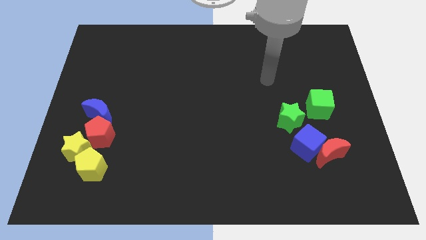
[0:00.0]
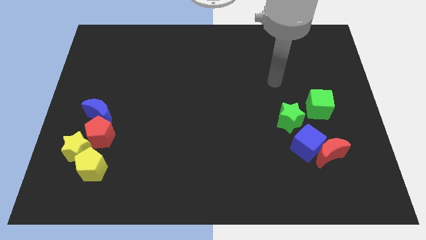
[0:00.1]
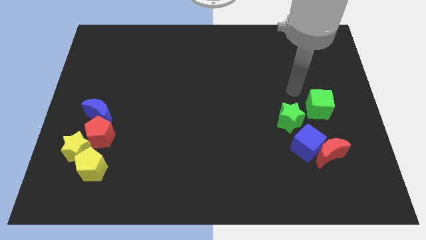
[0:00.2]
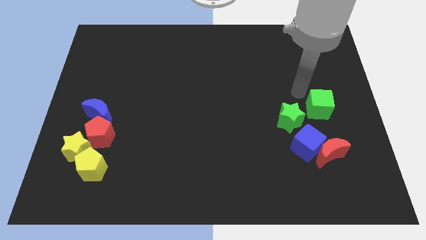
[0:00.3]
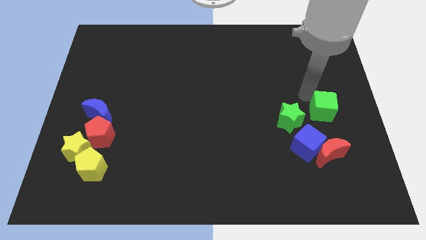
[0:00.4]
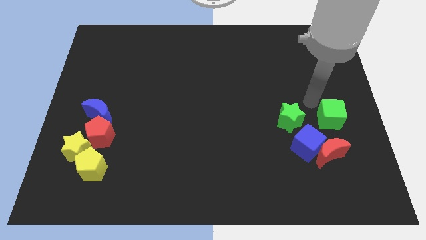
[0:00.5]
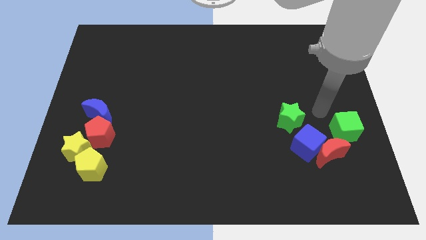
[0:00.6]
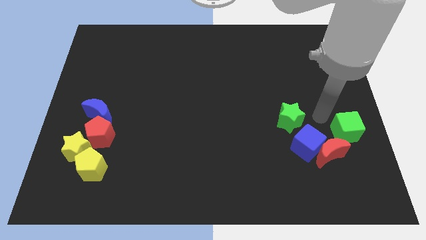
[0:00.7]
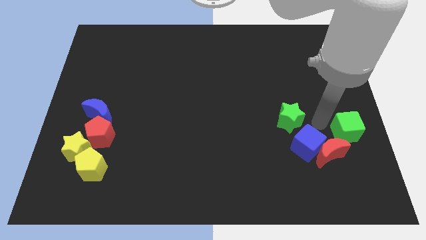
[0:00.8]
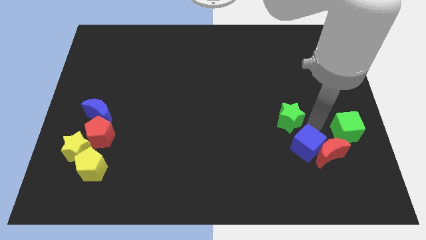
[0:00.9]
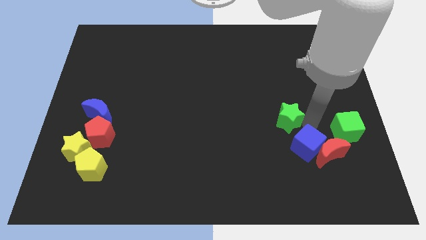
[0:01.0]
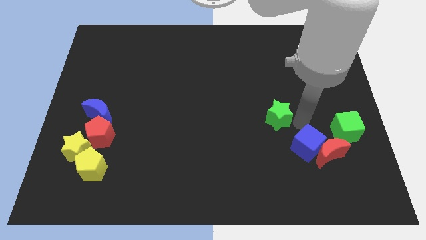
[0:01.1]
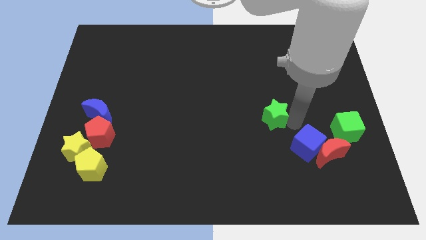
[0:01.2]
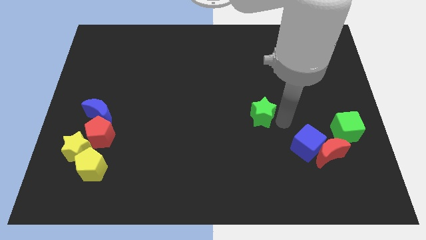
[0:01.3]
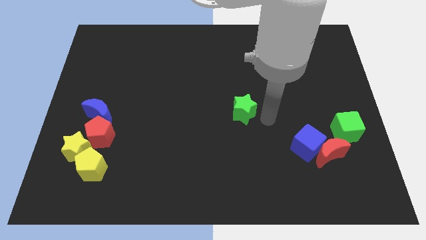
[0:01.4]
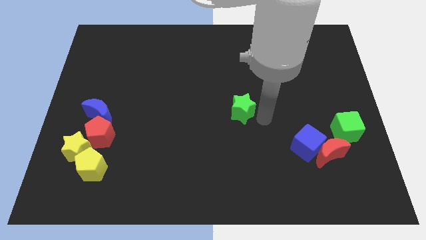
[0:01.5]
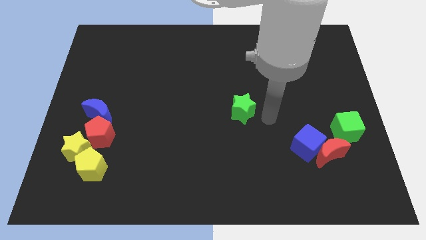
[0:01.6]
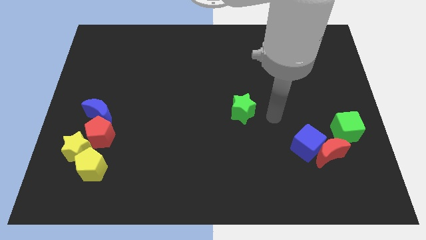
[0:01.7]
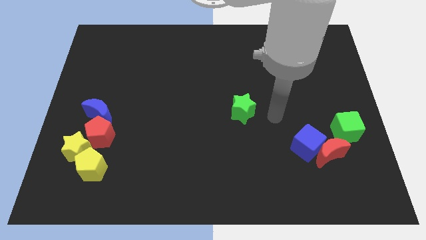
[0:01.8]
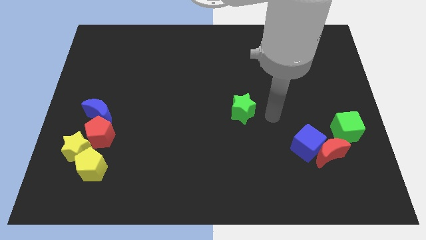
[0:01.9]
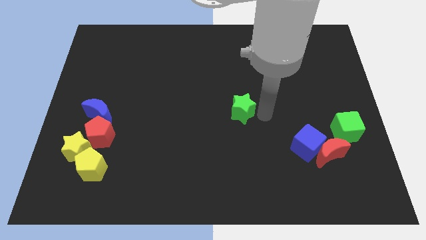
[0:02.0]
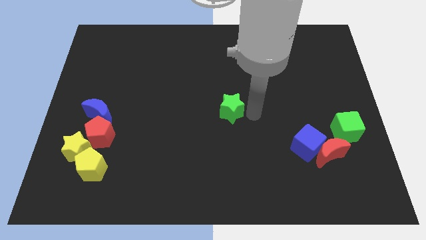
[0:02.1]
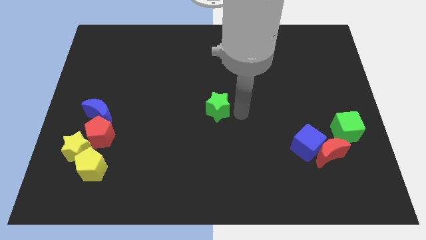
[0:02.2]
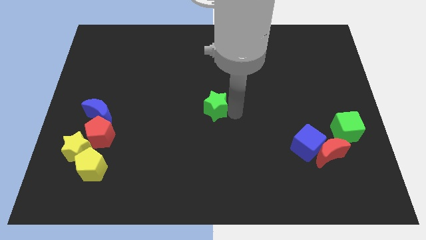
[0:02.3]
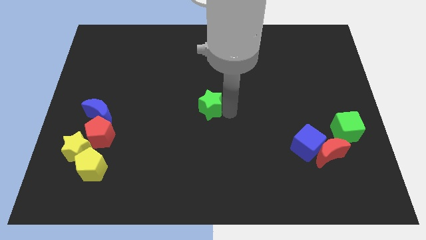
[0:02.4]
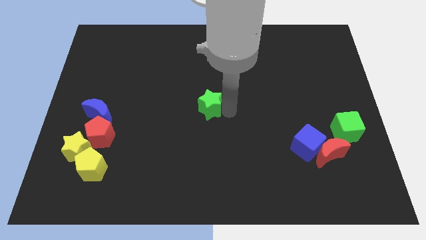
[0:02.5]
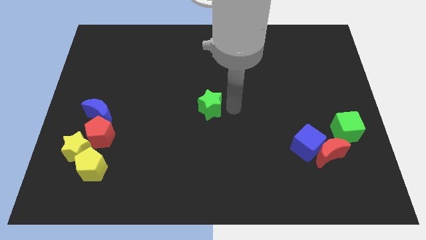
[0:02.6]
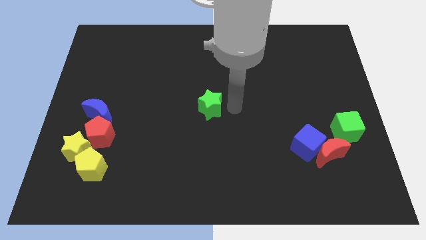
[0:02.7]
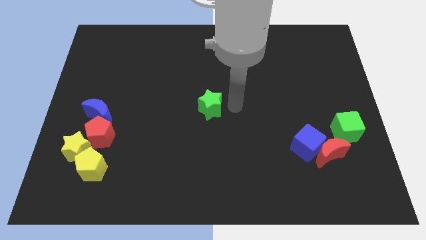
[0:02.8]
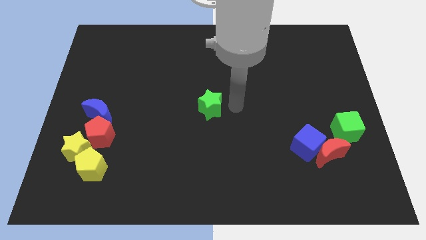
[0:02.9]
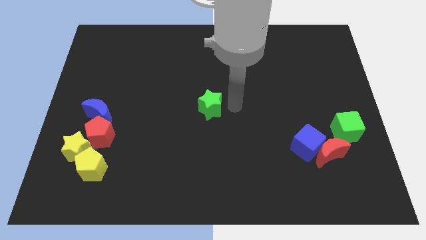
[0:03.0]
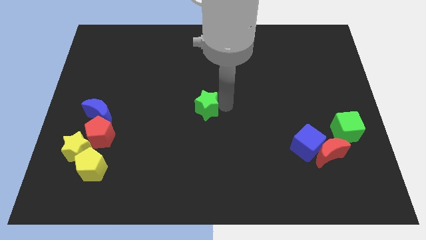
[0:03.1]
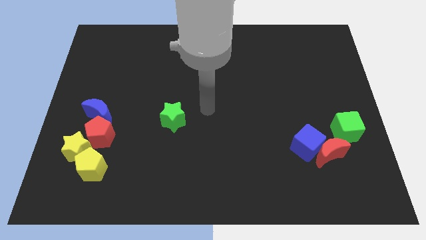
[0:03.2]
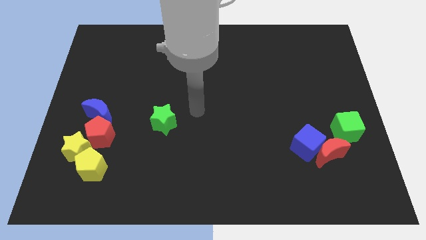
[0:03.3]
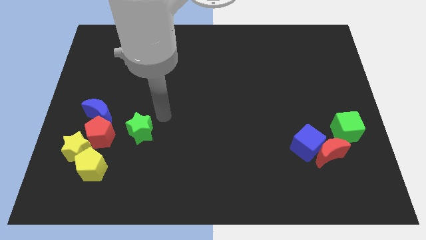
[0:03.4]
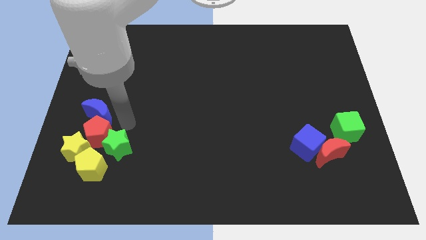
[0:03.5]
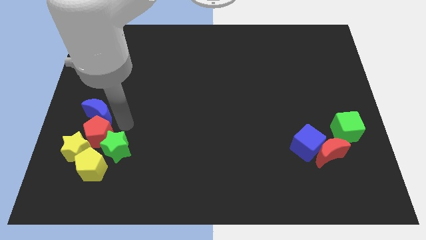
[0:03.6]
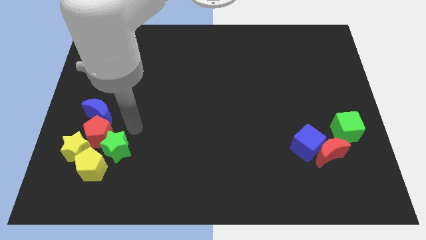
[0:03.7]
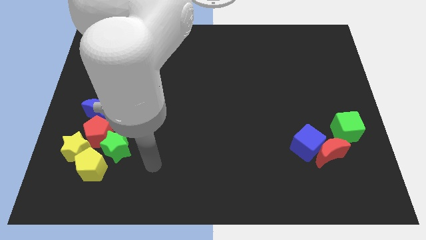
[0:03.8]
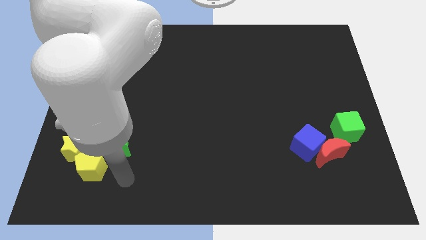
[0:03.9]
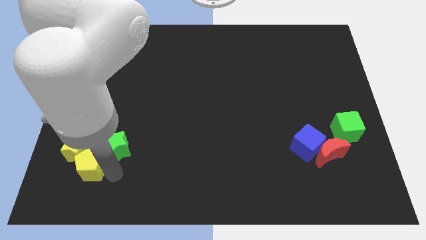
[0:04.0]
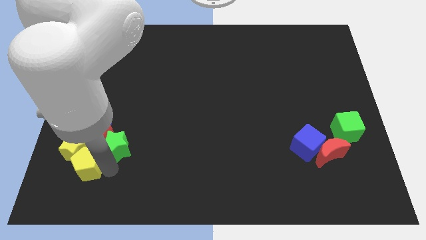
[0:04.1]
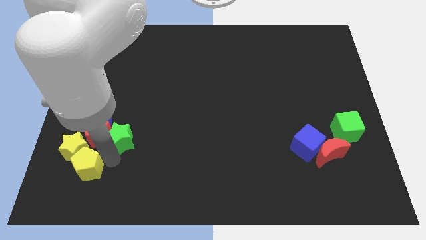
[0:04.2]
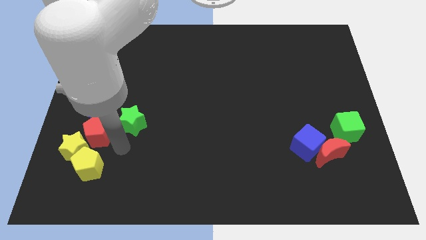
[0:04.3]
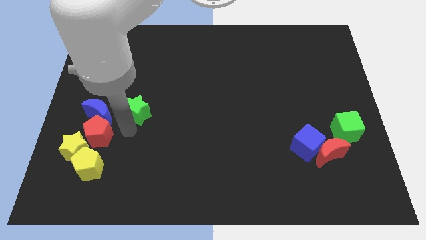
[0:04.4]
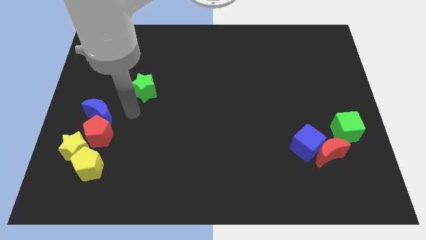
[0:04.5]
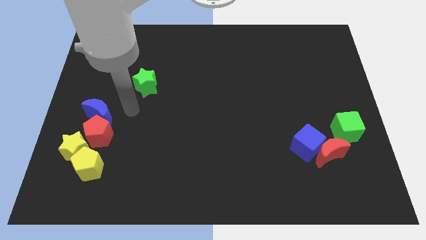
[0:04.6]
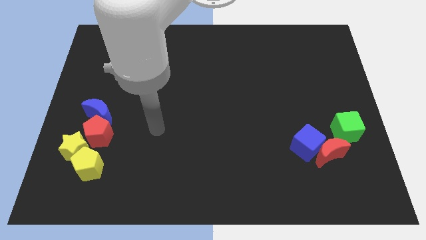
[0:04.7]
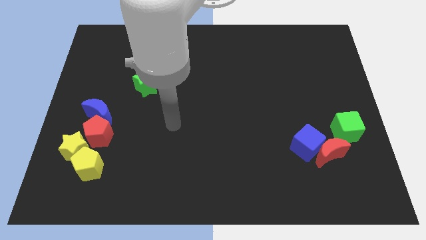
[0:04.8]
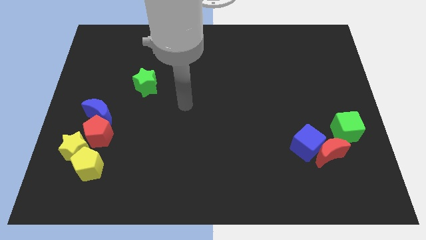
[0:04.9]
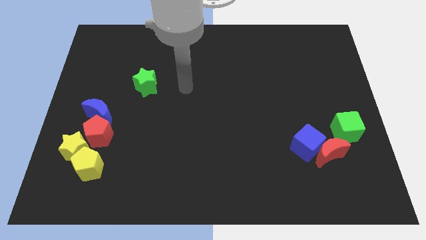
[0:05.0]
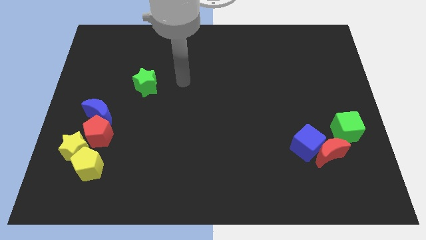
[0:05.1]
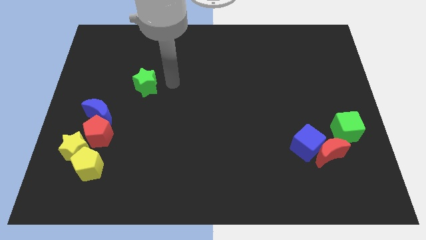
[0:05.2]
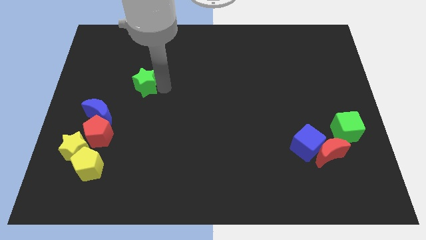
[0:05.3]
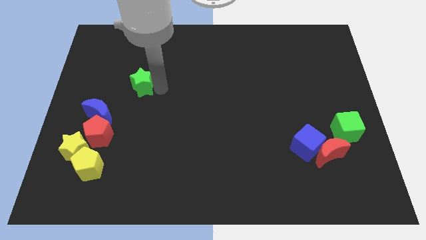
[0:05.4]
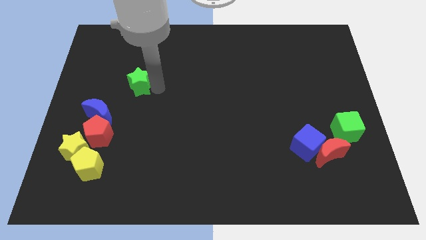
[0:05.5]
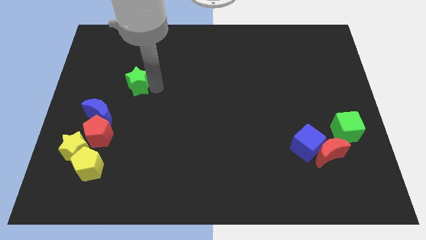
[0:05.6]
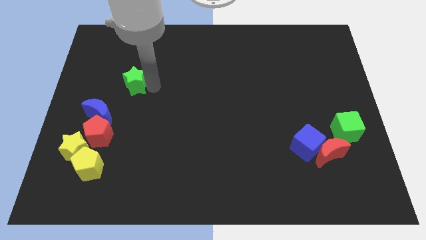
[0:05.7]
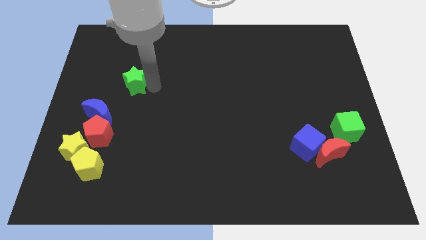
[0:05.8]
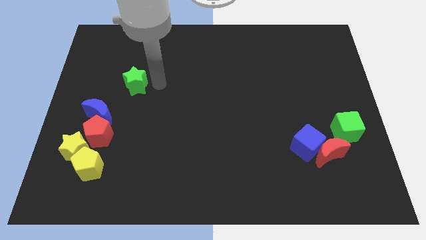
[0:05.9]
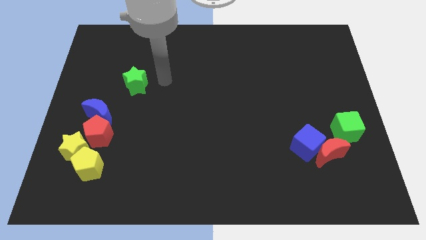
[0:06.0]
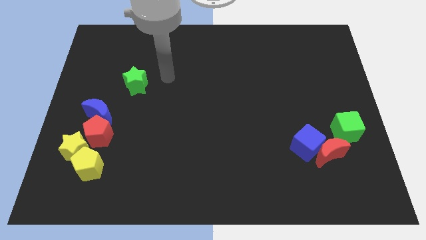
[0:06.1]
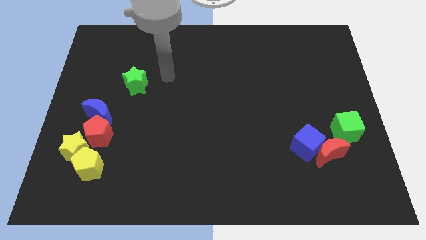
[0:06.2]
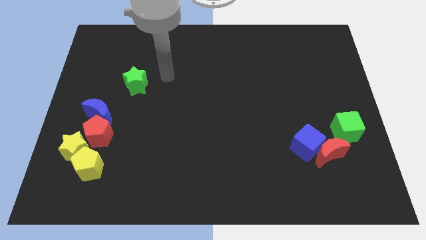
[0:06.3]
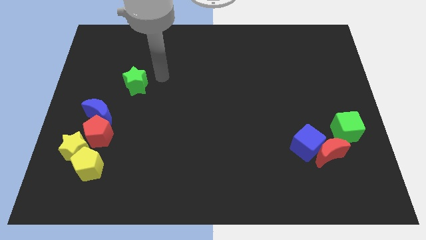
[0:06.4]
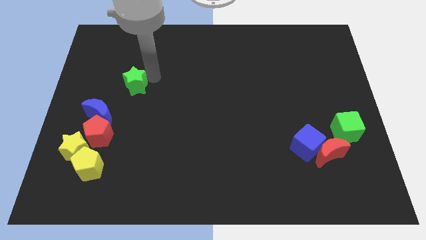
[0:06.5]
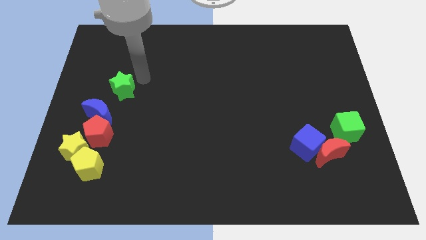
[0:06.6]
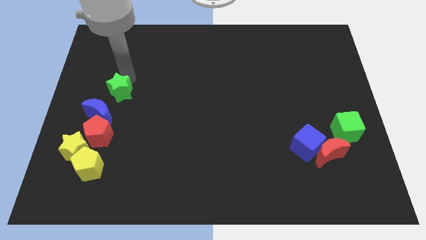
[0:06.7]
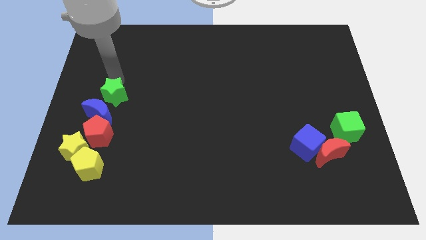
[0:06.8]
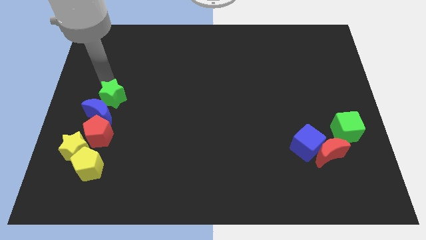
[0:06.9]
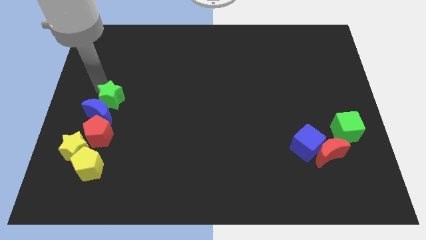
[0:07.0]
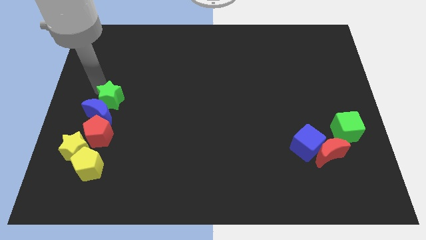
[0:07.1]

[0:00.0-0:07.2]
push the green star towards the blue moon

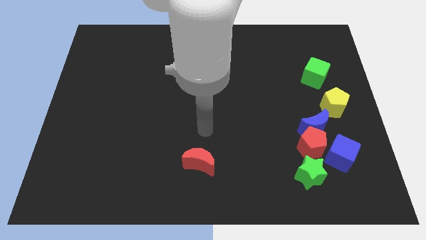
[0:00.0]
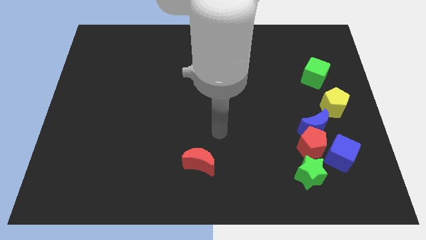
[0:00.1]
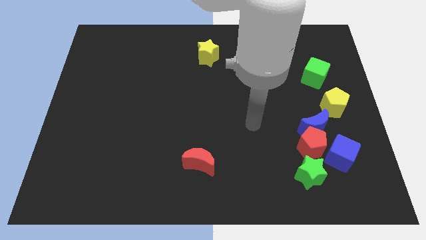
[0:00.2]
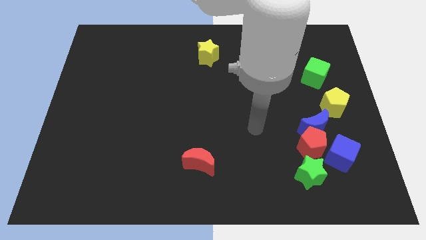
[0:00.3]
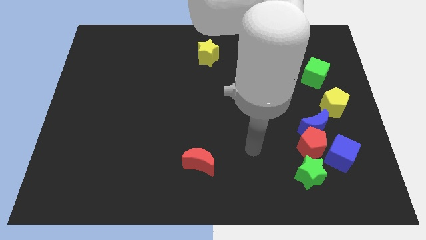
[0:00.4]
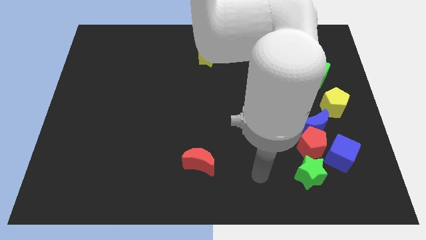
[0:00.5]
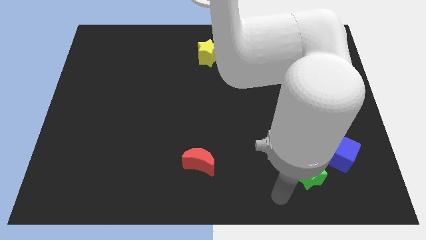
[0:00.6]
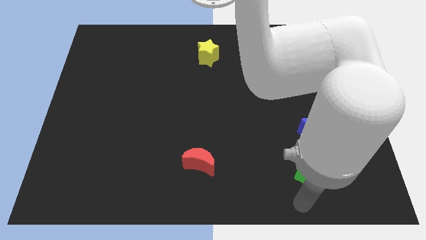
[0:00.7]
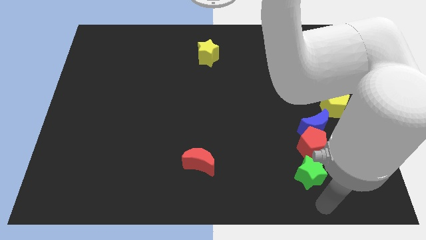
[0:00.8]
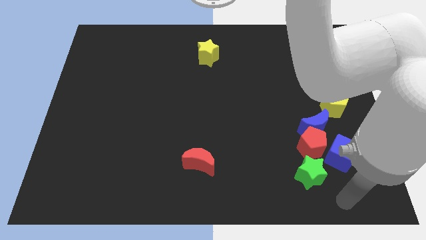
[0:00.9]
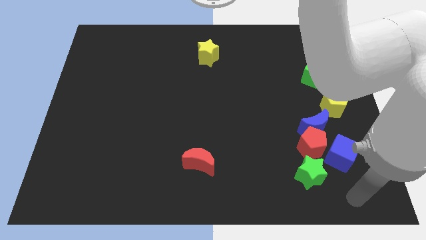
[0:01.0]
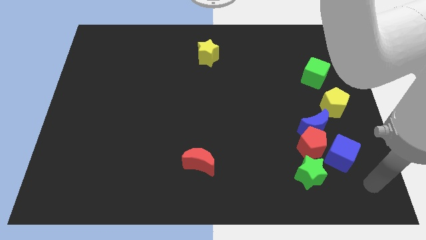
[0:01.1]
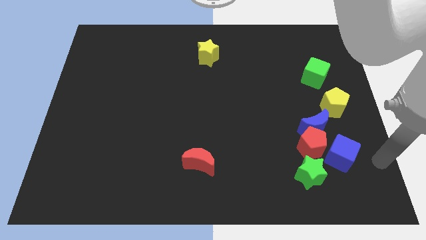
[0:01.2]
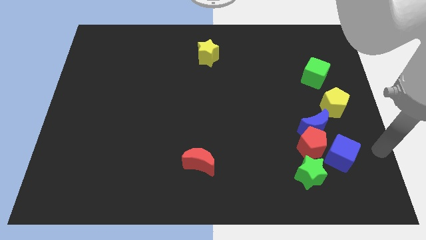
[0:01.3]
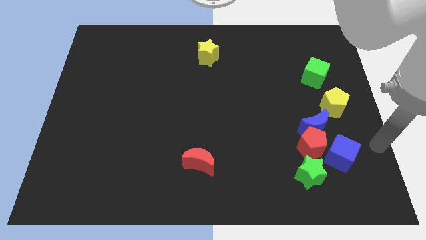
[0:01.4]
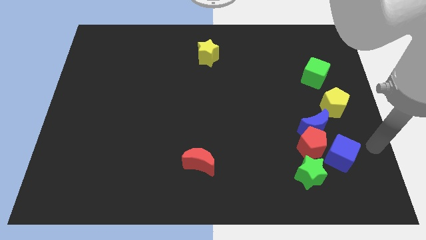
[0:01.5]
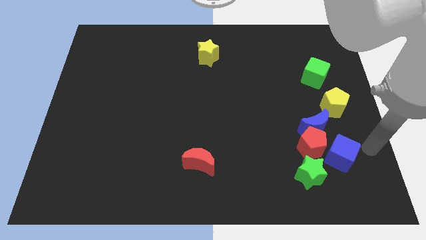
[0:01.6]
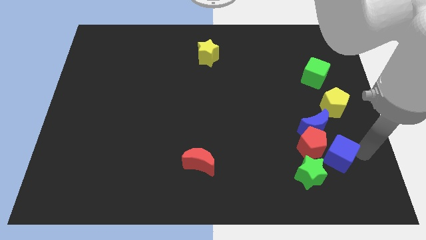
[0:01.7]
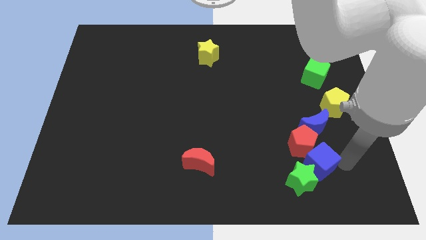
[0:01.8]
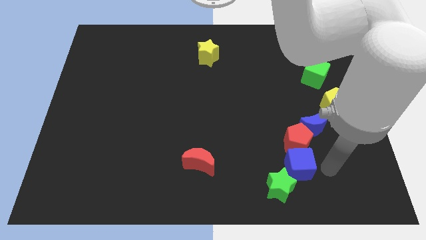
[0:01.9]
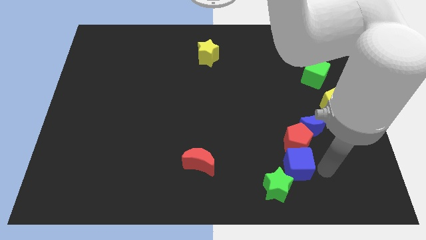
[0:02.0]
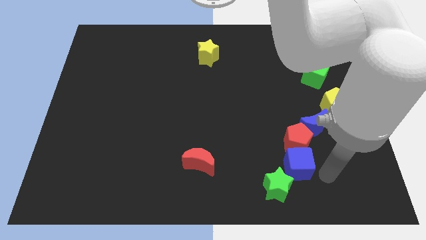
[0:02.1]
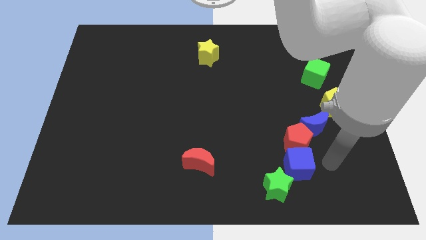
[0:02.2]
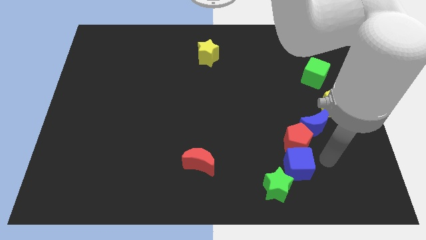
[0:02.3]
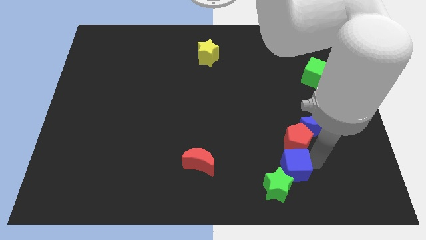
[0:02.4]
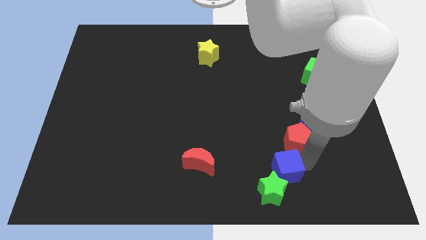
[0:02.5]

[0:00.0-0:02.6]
move the blue cube close to the green star
